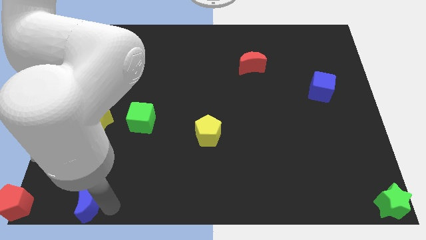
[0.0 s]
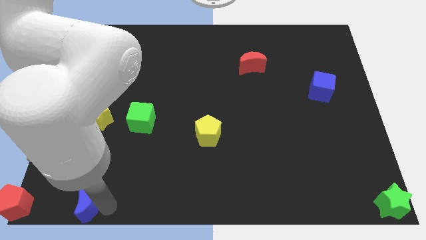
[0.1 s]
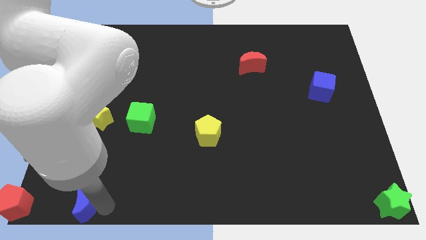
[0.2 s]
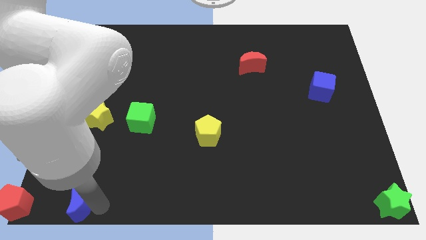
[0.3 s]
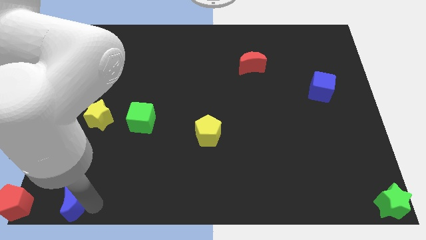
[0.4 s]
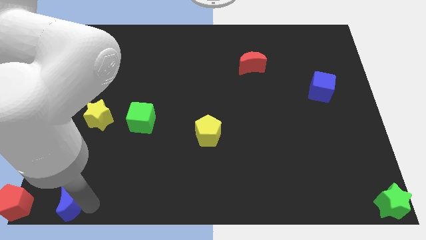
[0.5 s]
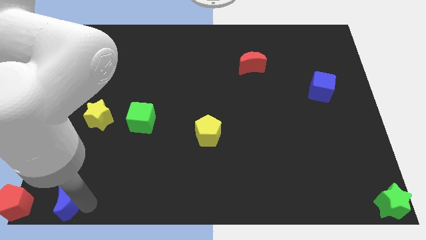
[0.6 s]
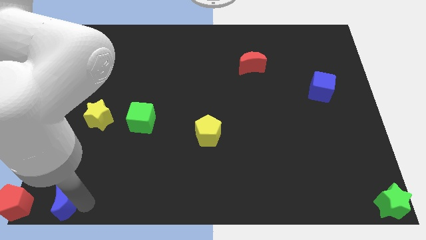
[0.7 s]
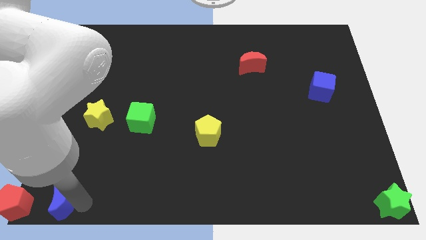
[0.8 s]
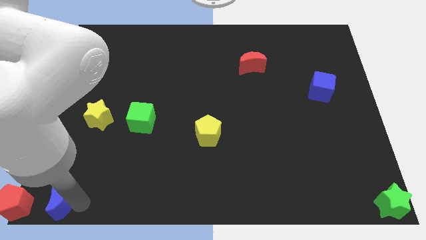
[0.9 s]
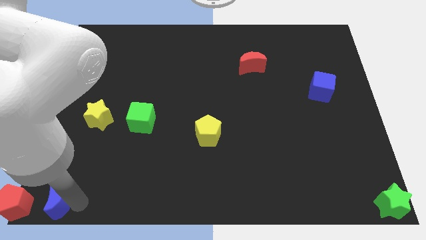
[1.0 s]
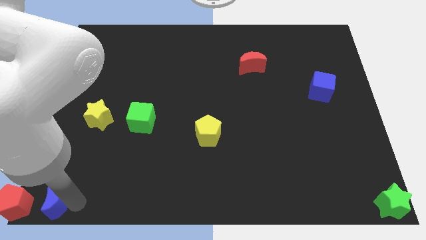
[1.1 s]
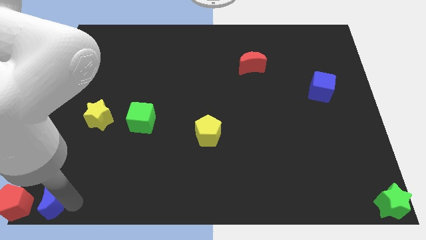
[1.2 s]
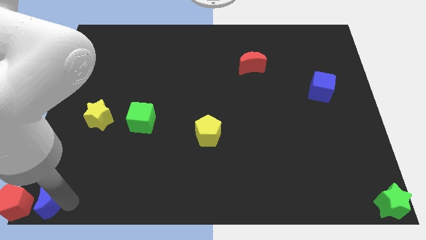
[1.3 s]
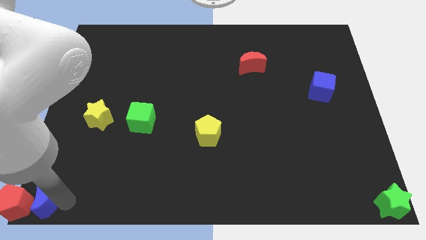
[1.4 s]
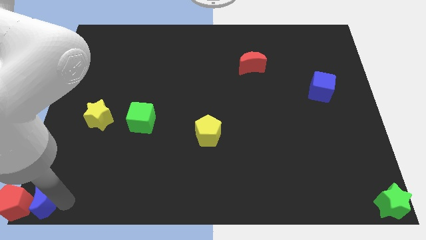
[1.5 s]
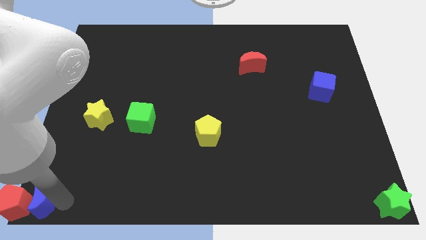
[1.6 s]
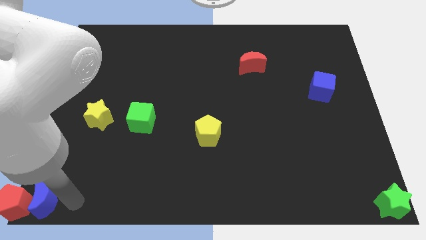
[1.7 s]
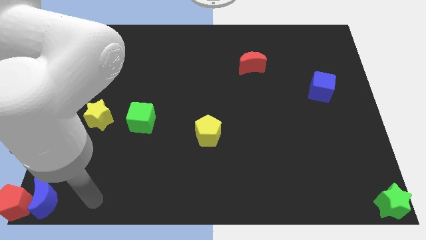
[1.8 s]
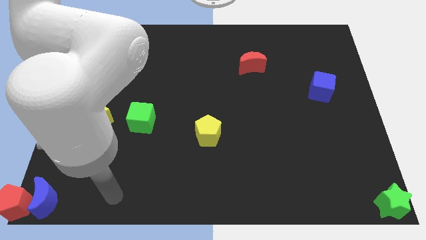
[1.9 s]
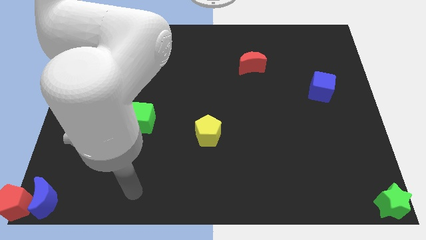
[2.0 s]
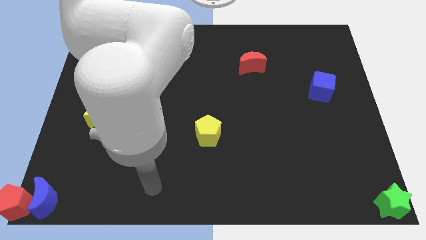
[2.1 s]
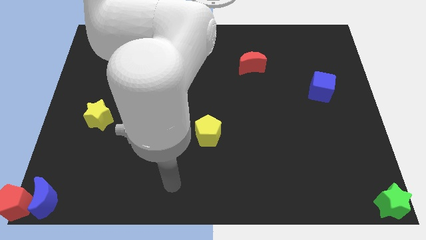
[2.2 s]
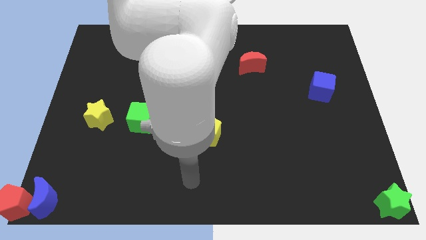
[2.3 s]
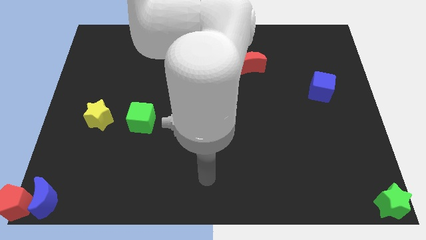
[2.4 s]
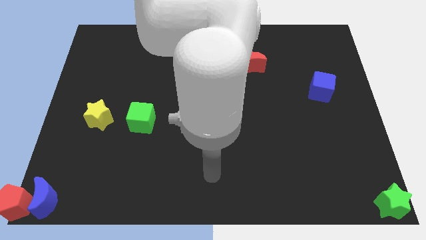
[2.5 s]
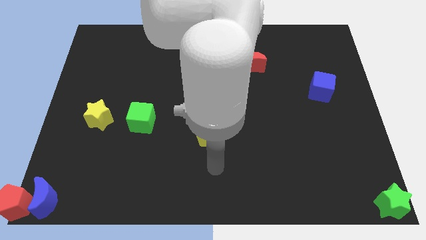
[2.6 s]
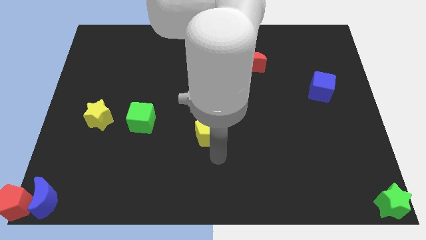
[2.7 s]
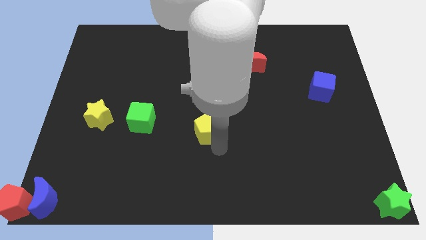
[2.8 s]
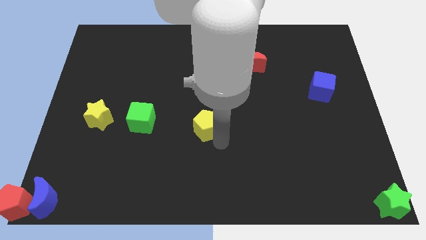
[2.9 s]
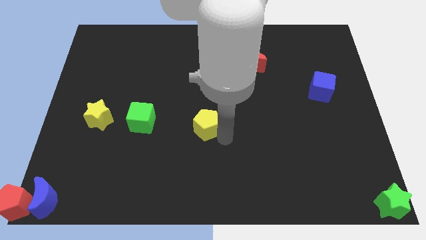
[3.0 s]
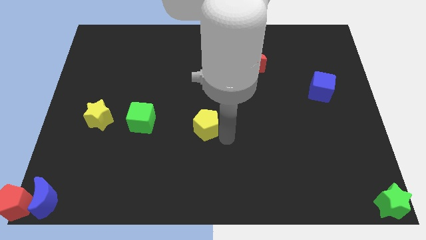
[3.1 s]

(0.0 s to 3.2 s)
slightly push the yellow pentagon up

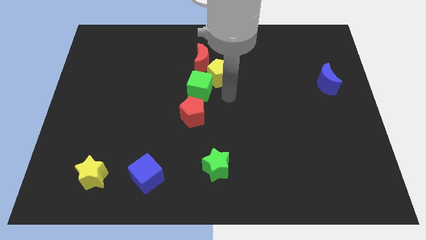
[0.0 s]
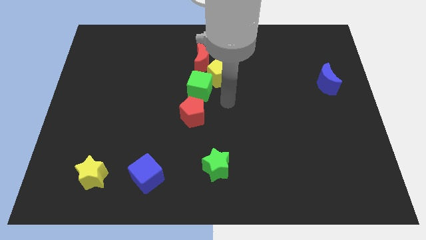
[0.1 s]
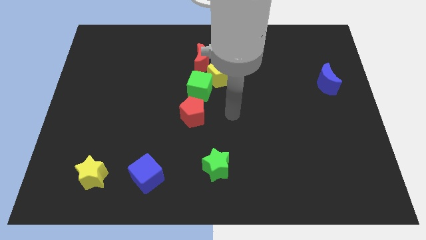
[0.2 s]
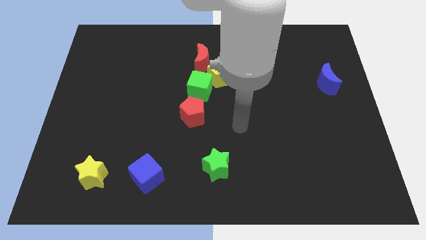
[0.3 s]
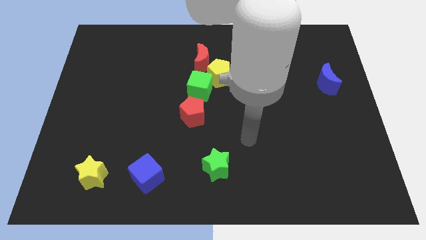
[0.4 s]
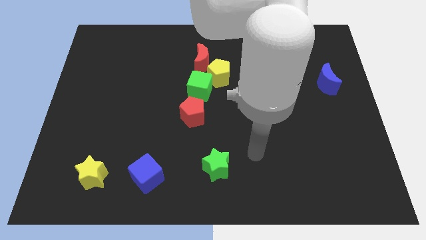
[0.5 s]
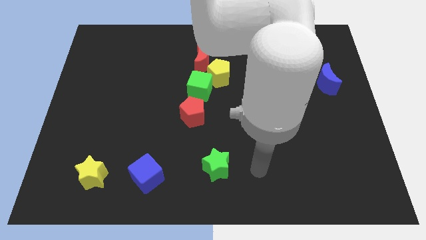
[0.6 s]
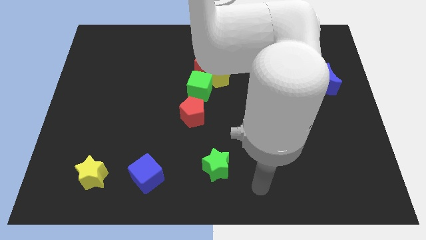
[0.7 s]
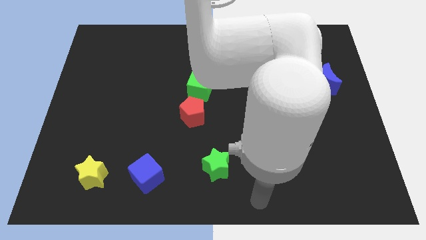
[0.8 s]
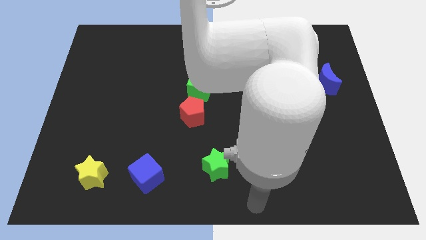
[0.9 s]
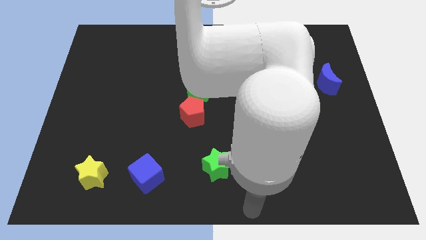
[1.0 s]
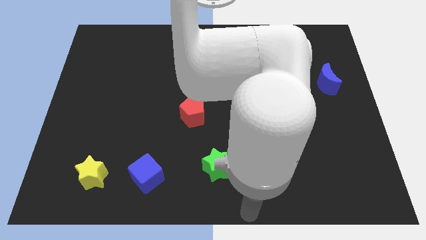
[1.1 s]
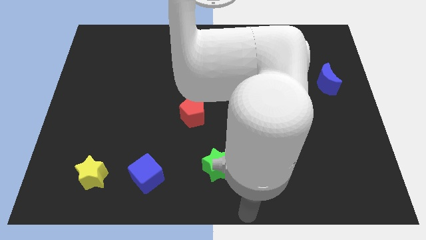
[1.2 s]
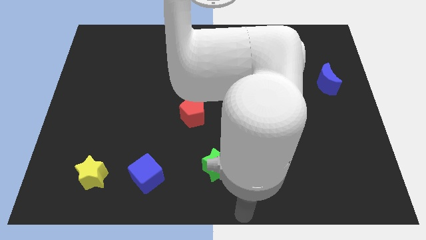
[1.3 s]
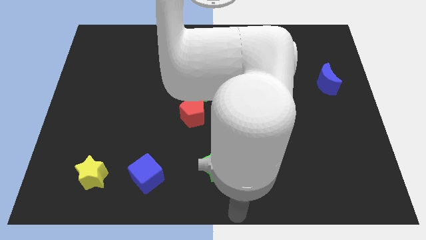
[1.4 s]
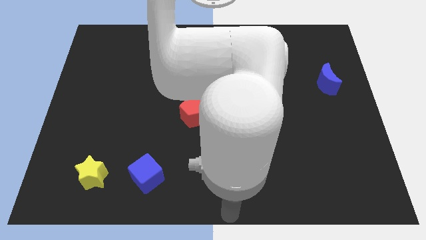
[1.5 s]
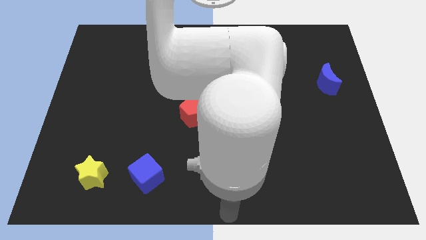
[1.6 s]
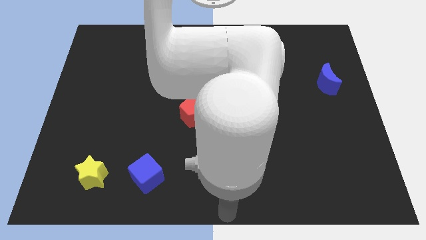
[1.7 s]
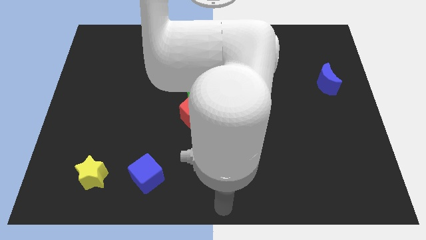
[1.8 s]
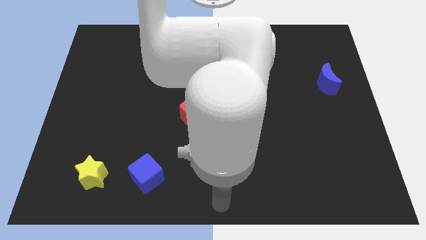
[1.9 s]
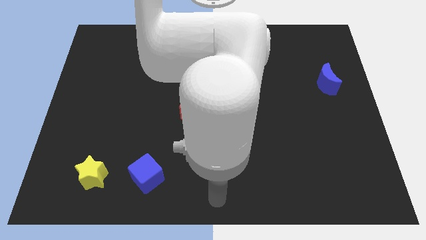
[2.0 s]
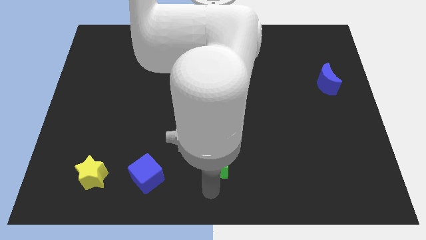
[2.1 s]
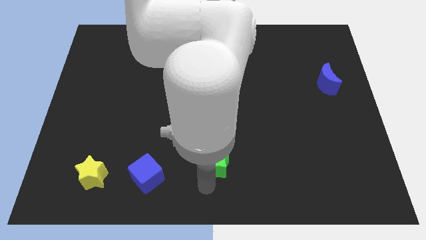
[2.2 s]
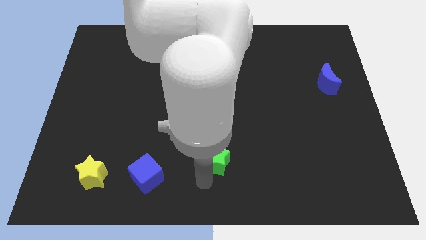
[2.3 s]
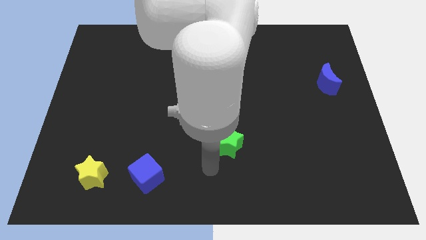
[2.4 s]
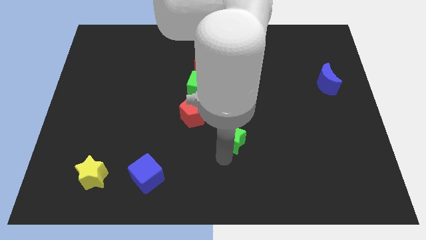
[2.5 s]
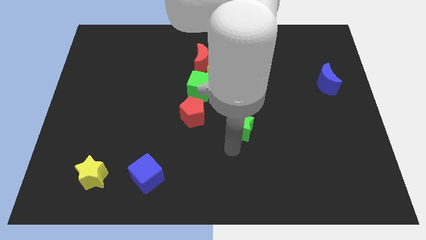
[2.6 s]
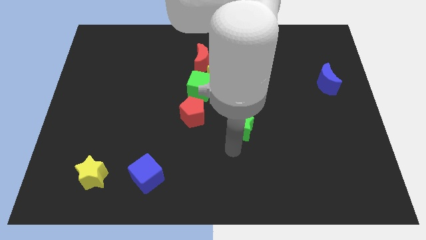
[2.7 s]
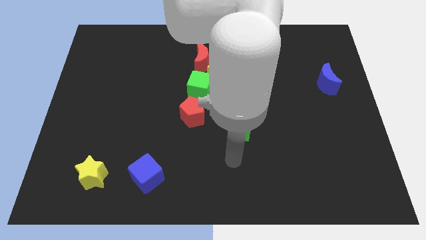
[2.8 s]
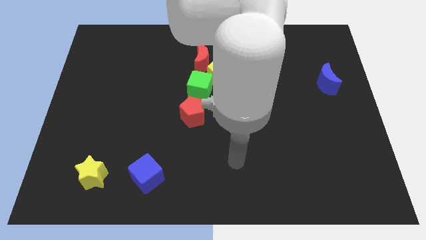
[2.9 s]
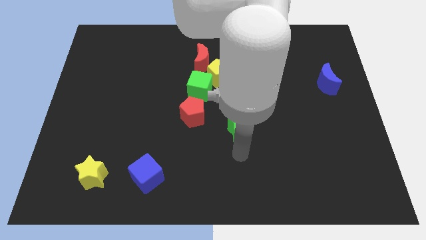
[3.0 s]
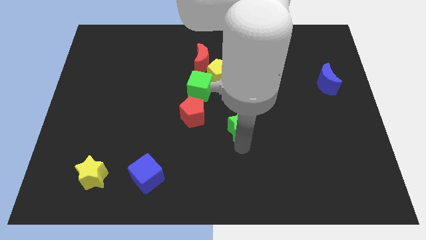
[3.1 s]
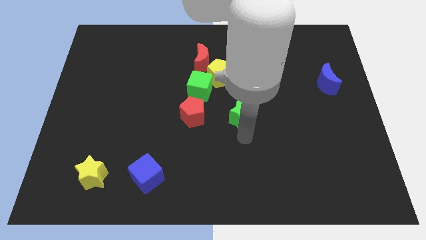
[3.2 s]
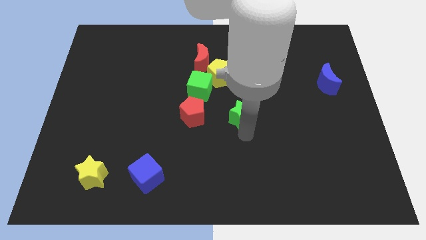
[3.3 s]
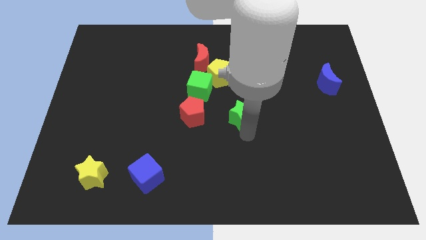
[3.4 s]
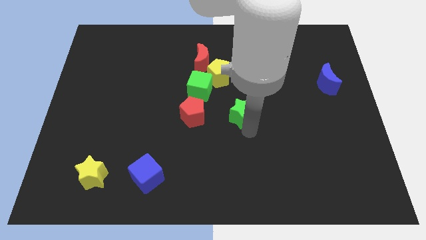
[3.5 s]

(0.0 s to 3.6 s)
push the green star towards the yellow pentagon

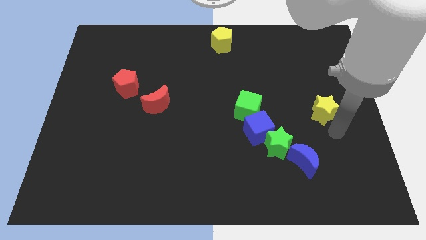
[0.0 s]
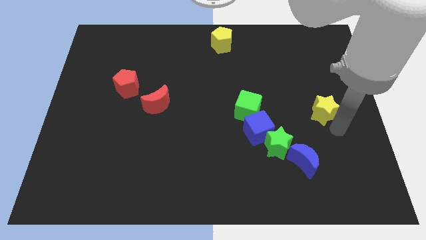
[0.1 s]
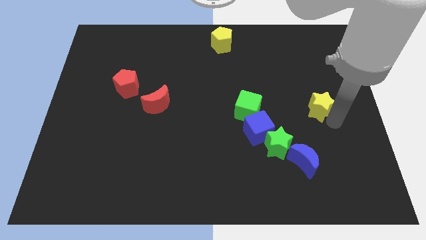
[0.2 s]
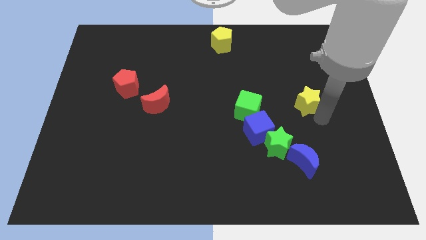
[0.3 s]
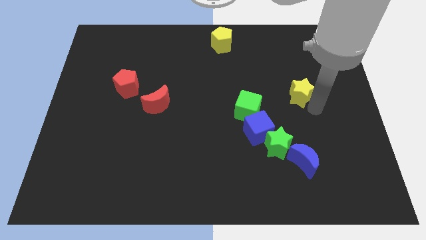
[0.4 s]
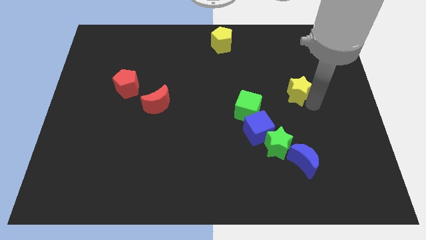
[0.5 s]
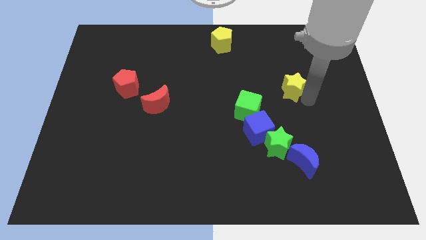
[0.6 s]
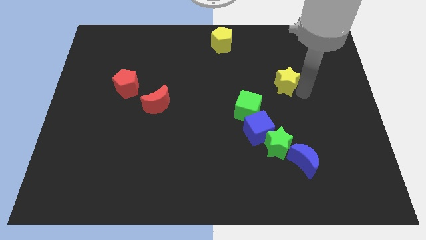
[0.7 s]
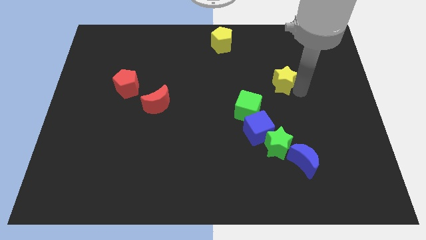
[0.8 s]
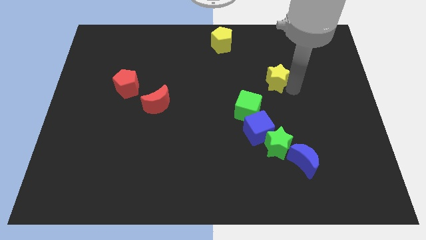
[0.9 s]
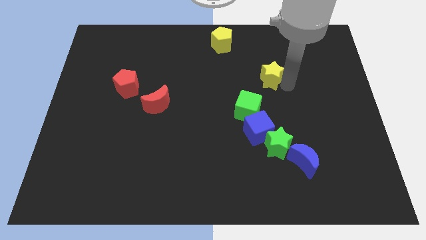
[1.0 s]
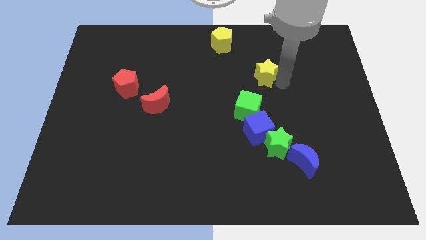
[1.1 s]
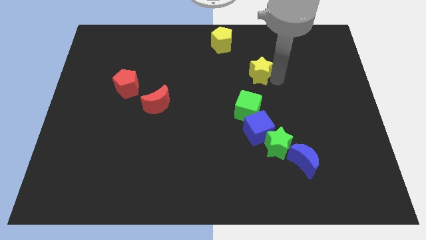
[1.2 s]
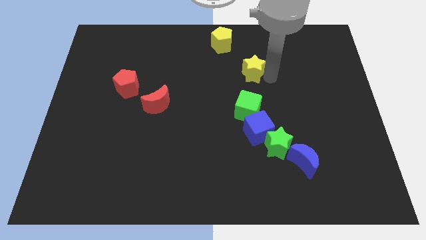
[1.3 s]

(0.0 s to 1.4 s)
push the yellow star to the top of the green cube

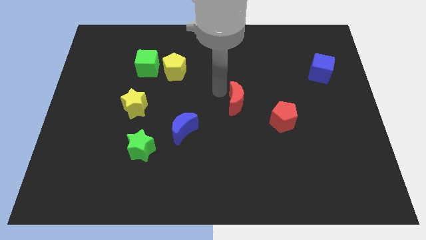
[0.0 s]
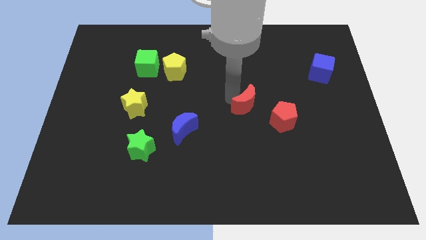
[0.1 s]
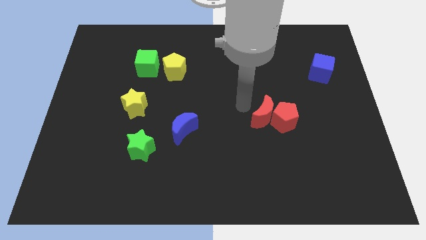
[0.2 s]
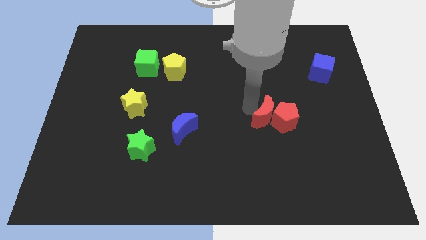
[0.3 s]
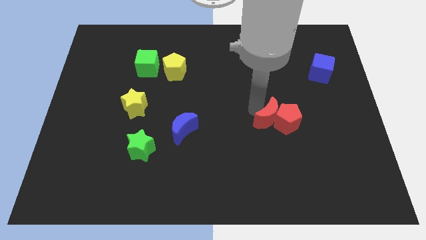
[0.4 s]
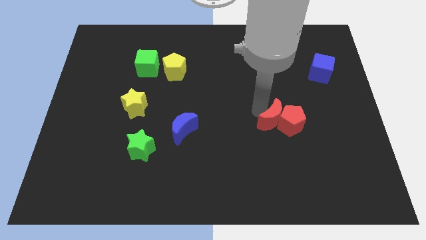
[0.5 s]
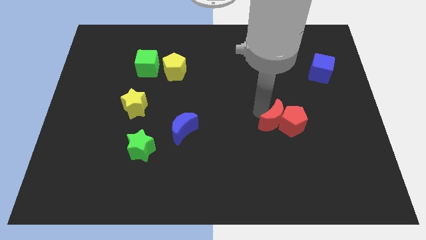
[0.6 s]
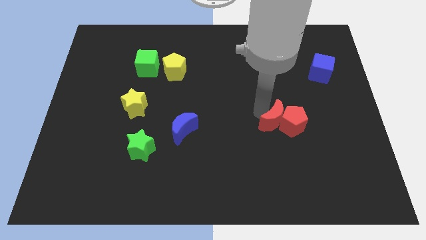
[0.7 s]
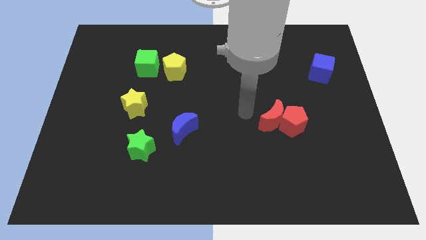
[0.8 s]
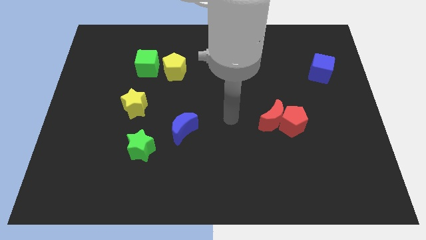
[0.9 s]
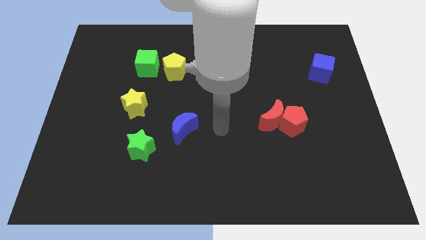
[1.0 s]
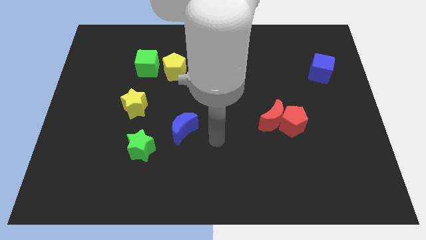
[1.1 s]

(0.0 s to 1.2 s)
push the red pentagon with the red crescent
